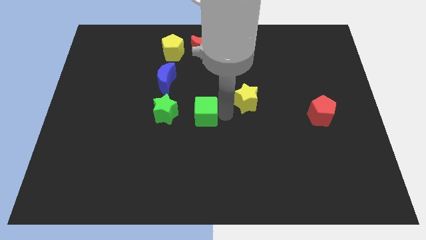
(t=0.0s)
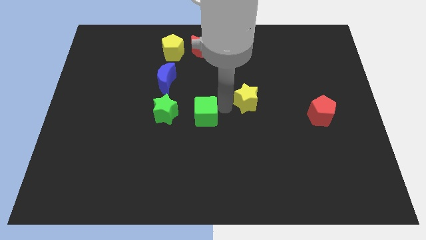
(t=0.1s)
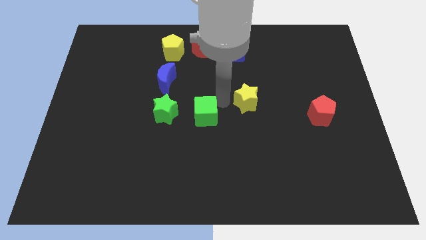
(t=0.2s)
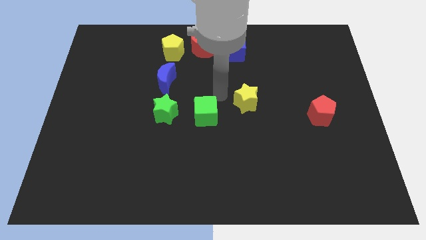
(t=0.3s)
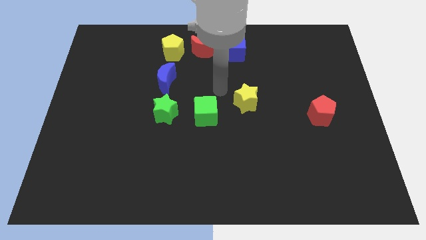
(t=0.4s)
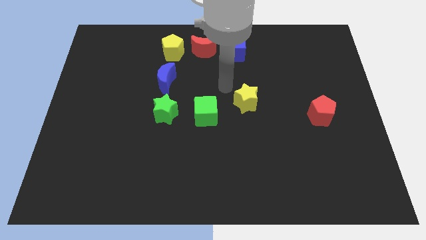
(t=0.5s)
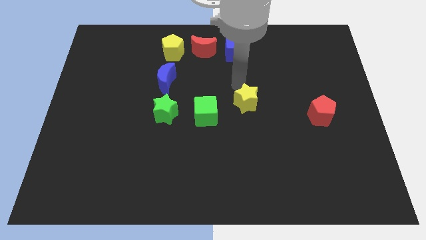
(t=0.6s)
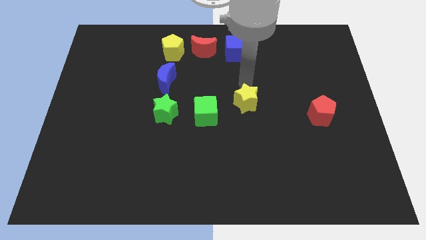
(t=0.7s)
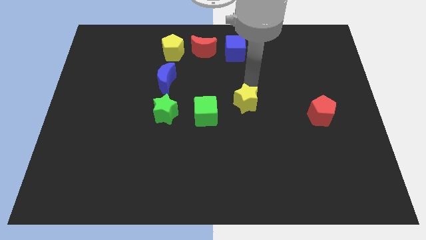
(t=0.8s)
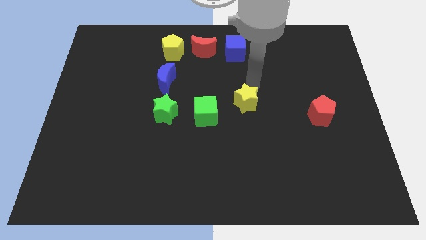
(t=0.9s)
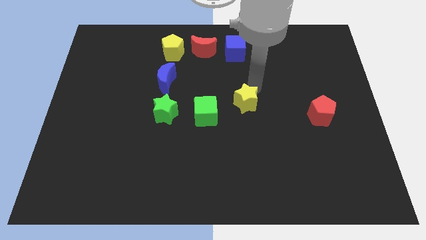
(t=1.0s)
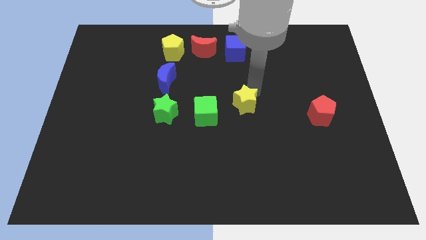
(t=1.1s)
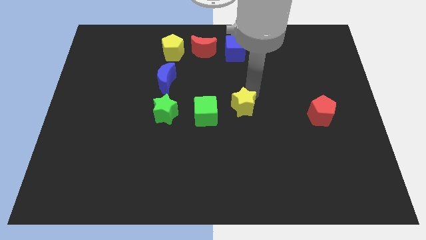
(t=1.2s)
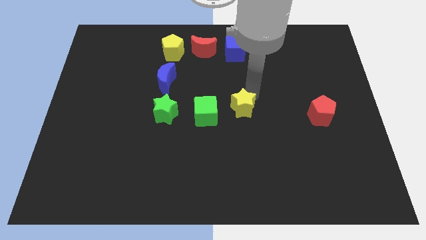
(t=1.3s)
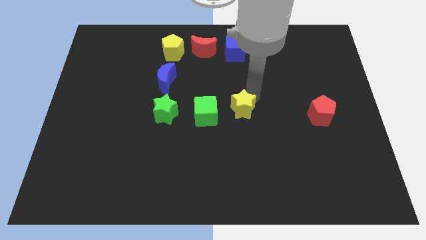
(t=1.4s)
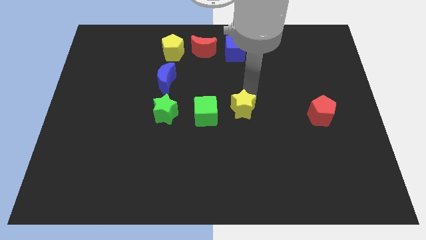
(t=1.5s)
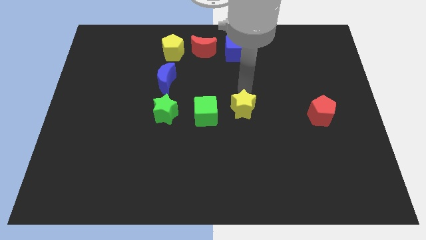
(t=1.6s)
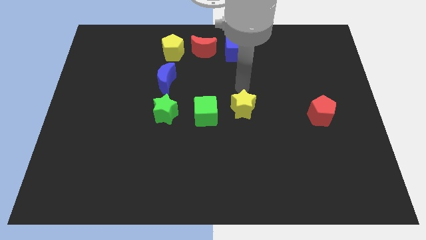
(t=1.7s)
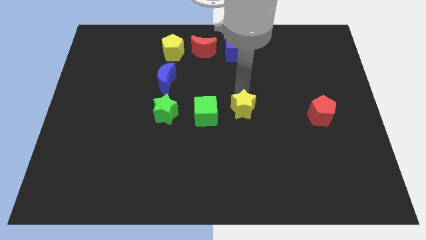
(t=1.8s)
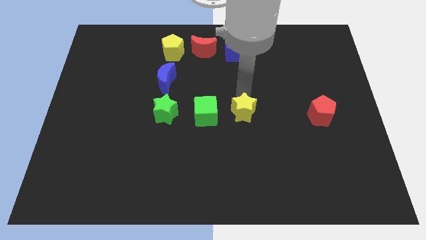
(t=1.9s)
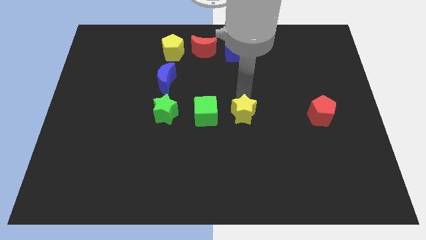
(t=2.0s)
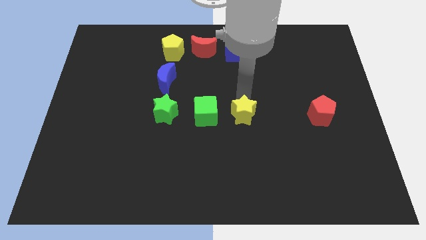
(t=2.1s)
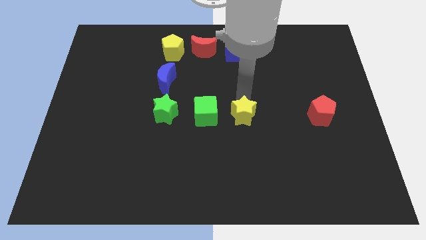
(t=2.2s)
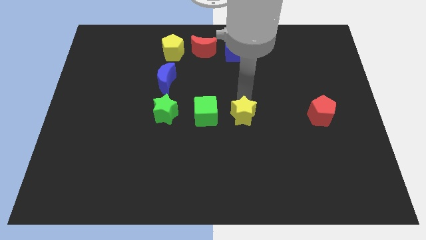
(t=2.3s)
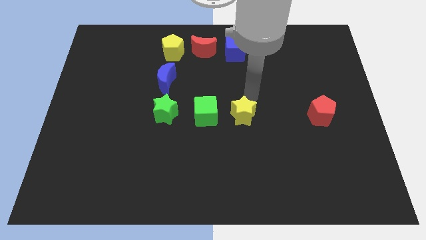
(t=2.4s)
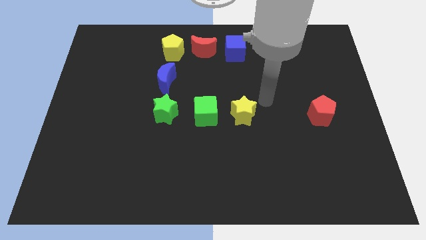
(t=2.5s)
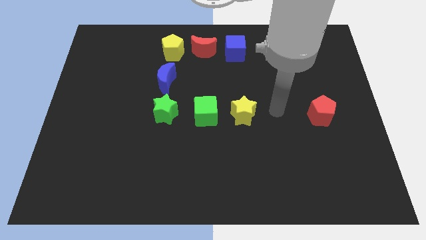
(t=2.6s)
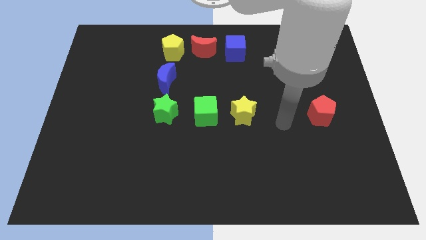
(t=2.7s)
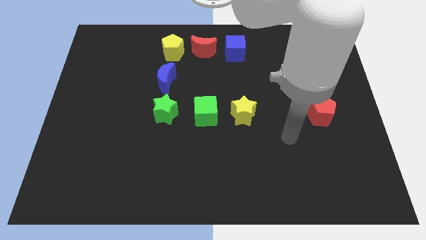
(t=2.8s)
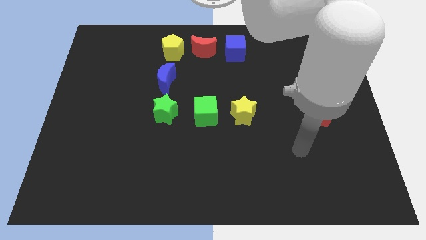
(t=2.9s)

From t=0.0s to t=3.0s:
move the yellow star to the right of the green cube

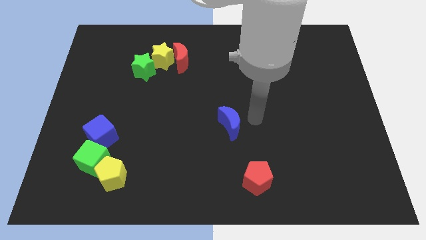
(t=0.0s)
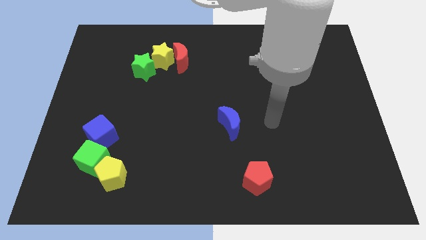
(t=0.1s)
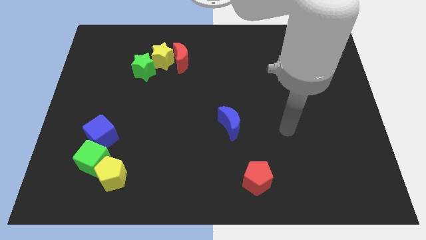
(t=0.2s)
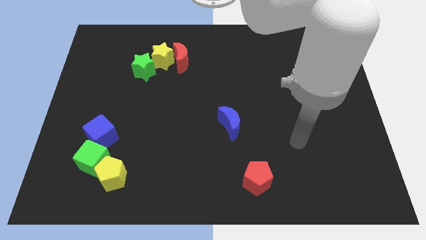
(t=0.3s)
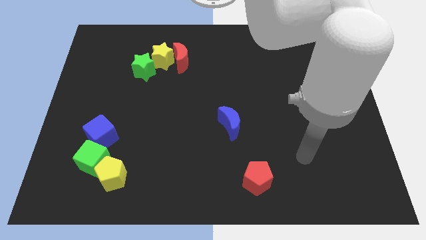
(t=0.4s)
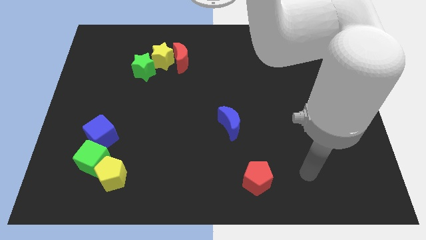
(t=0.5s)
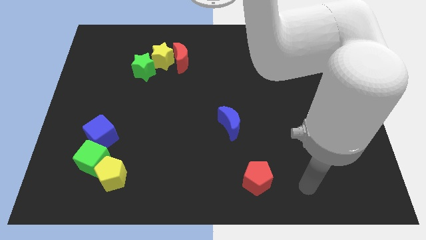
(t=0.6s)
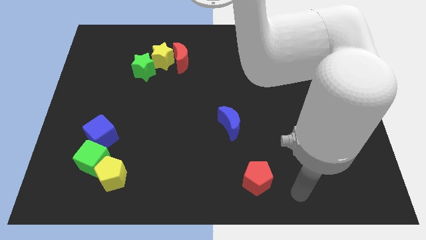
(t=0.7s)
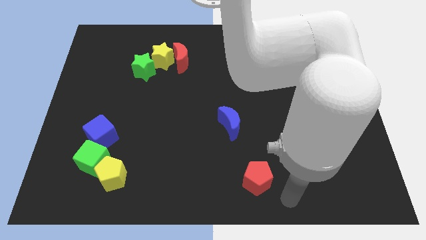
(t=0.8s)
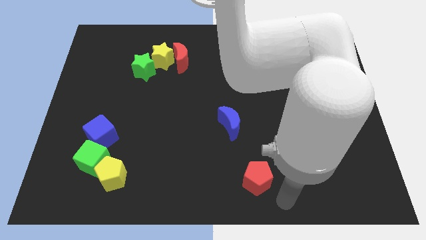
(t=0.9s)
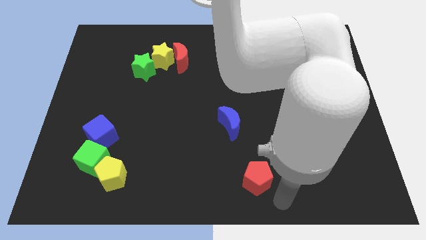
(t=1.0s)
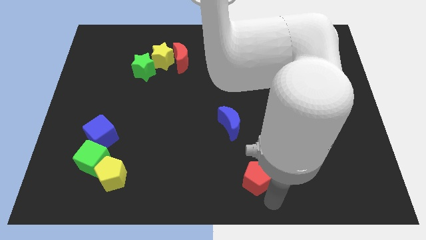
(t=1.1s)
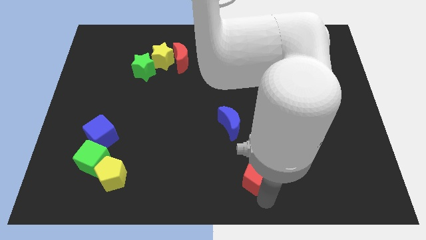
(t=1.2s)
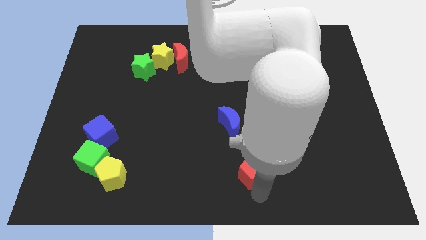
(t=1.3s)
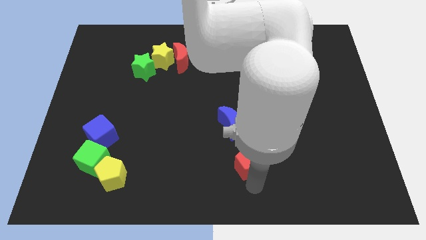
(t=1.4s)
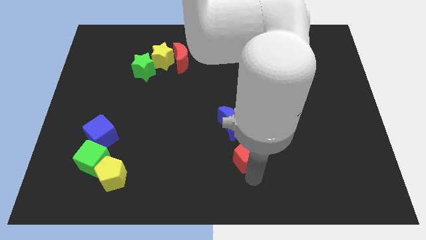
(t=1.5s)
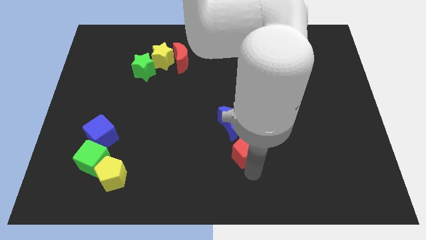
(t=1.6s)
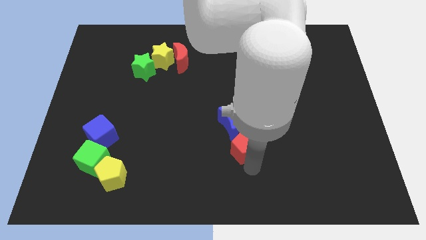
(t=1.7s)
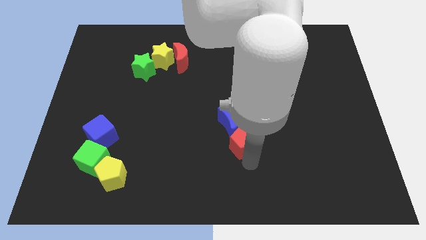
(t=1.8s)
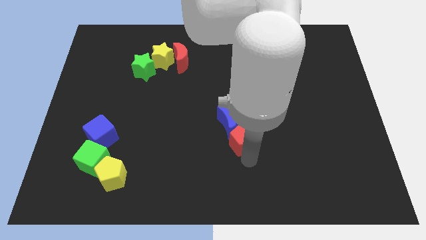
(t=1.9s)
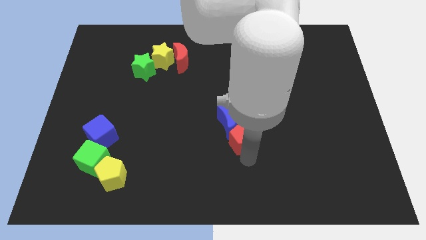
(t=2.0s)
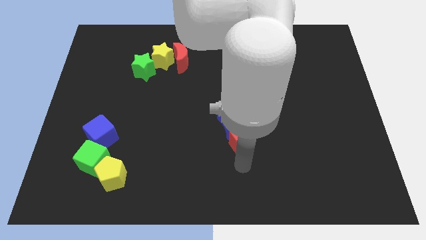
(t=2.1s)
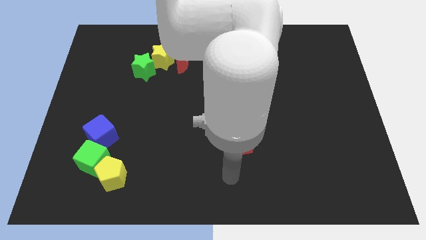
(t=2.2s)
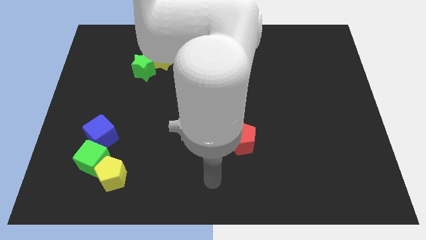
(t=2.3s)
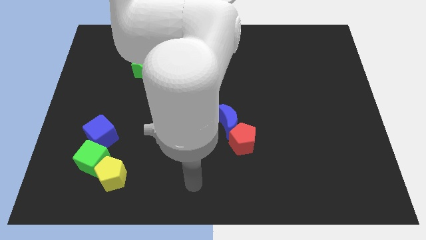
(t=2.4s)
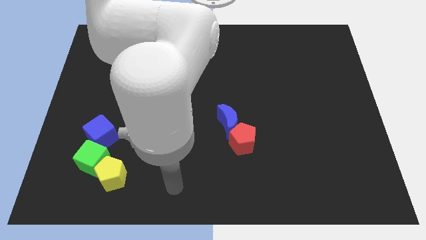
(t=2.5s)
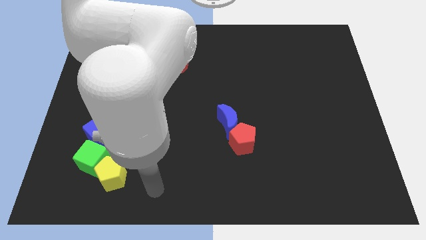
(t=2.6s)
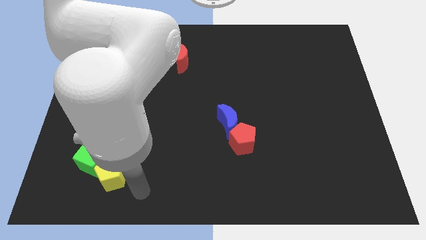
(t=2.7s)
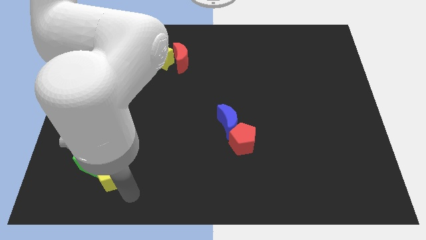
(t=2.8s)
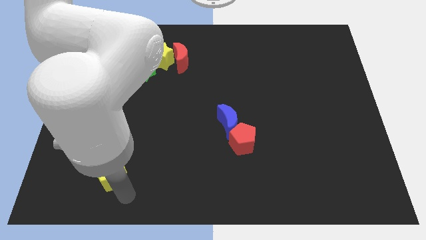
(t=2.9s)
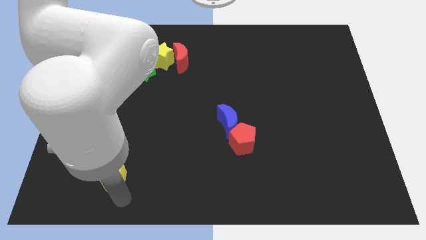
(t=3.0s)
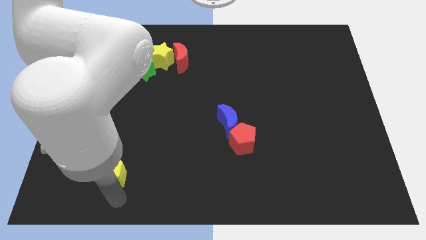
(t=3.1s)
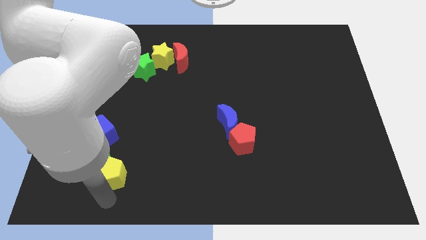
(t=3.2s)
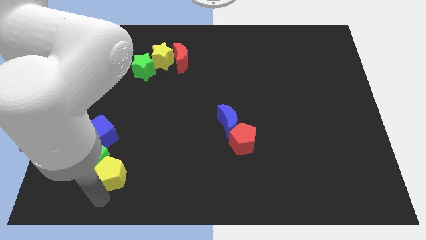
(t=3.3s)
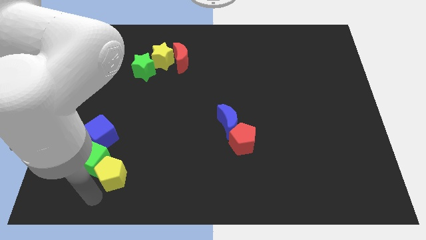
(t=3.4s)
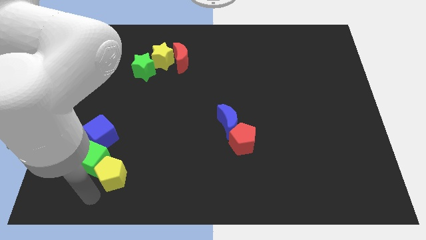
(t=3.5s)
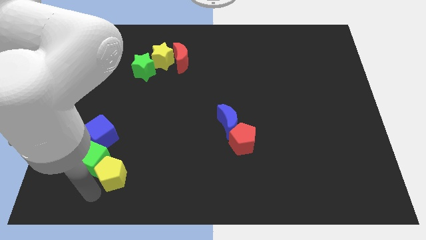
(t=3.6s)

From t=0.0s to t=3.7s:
move the red pentagon below the blue crescent

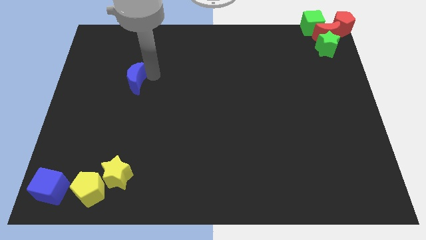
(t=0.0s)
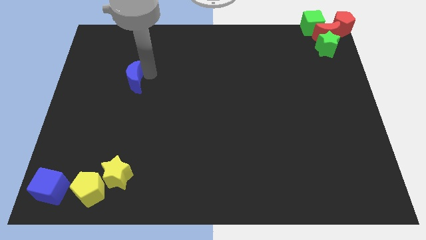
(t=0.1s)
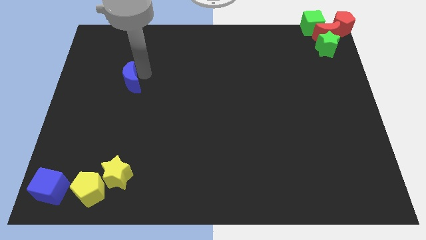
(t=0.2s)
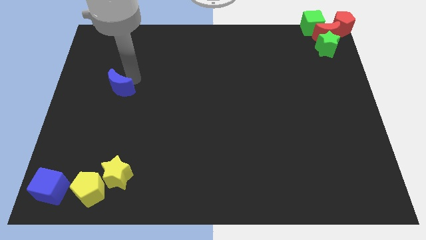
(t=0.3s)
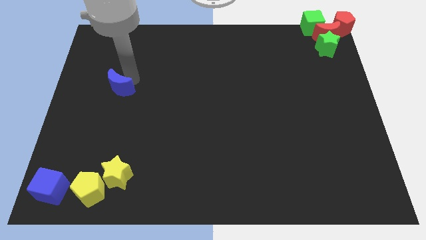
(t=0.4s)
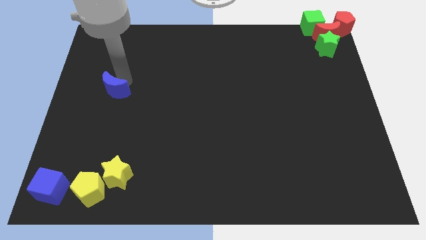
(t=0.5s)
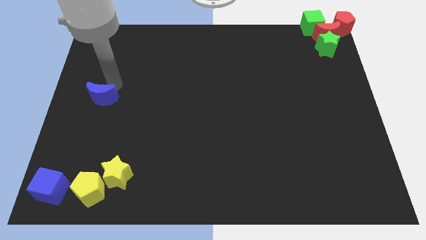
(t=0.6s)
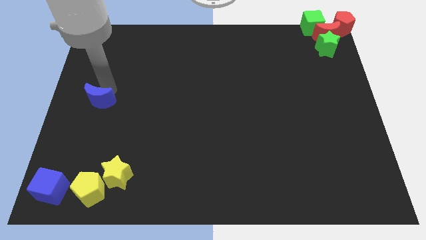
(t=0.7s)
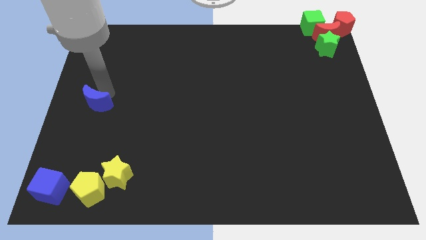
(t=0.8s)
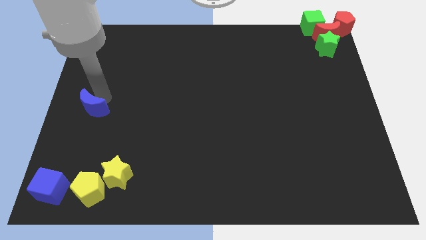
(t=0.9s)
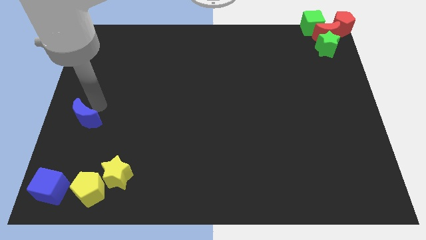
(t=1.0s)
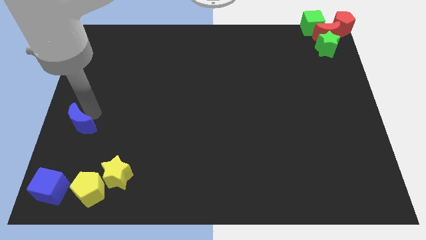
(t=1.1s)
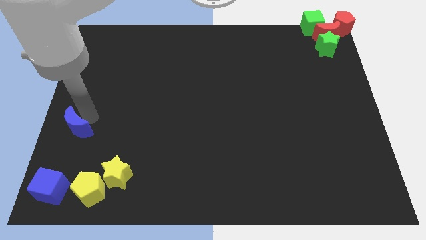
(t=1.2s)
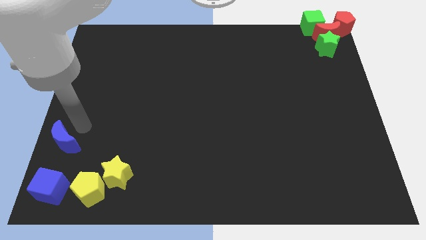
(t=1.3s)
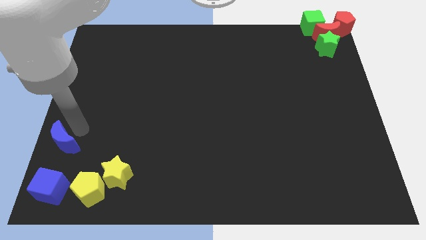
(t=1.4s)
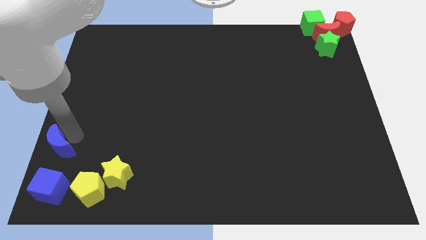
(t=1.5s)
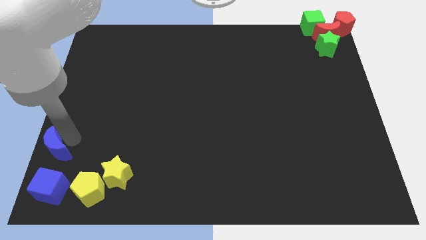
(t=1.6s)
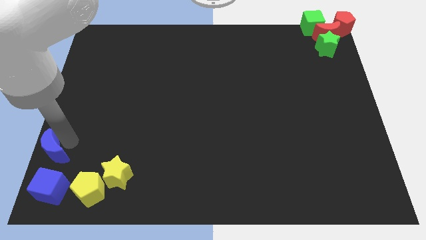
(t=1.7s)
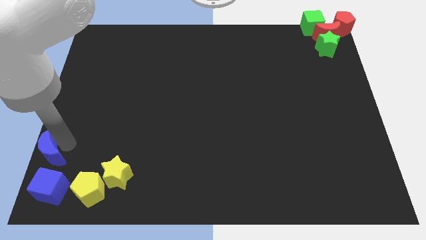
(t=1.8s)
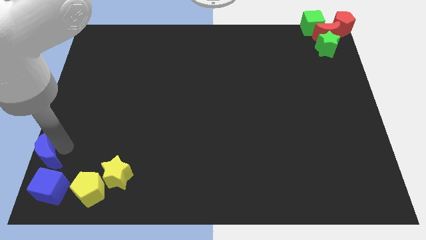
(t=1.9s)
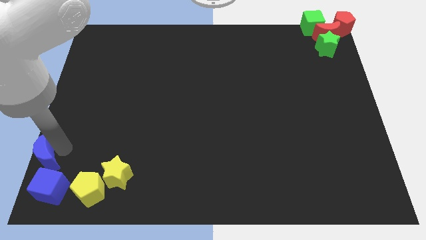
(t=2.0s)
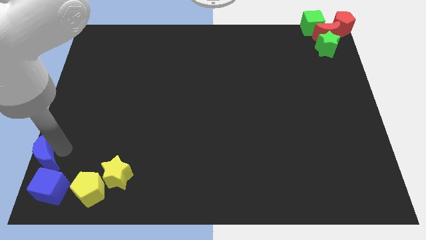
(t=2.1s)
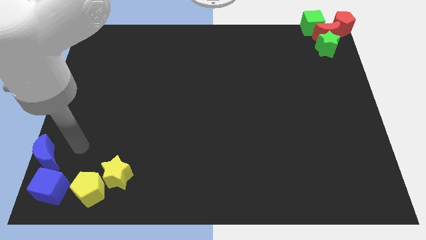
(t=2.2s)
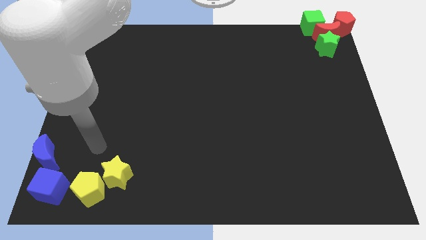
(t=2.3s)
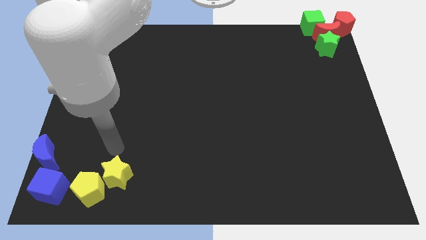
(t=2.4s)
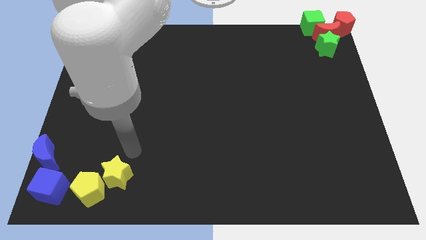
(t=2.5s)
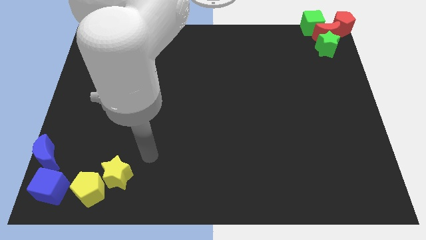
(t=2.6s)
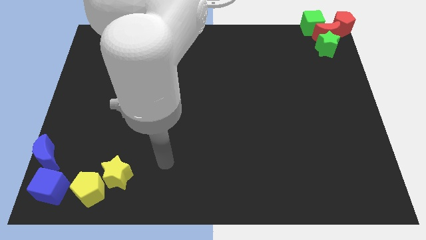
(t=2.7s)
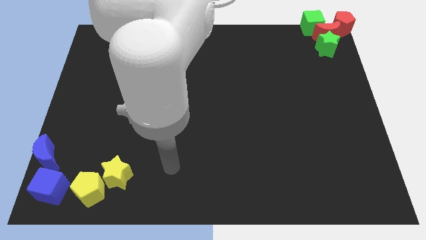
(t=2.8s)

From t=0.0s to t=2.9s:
move the blue crescent to the top of the blue cube
